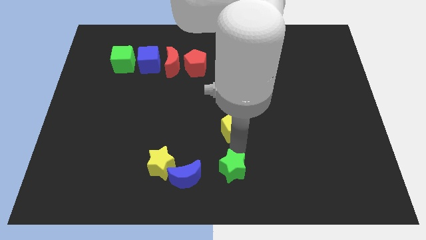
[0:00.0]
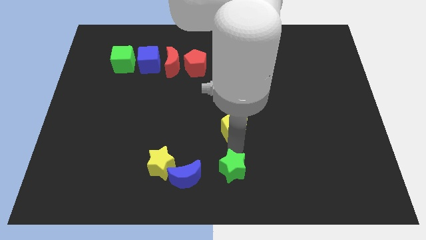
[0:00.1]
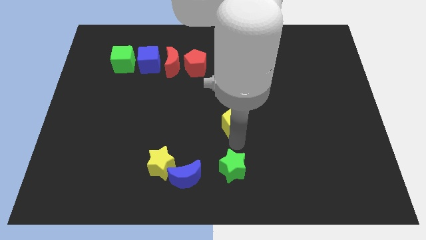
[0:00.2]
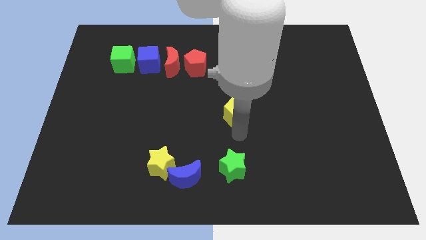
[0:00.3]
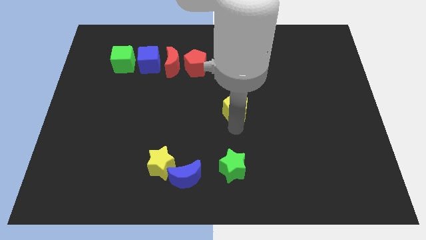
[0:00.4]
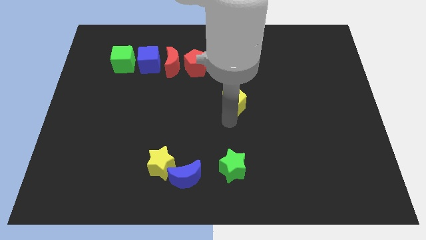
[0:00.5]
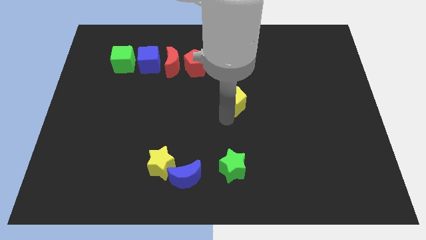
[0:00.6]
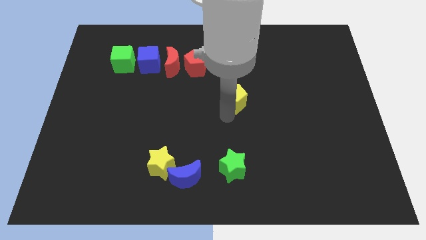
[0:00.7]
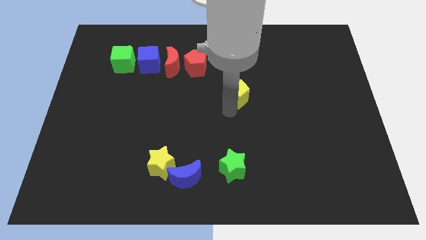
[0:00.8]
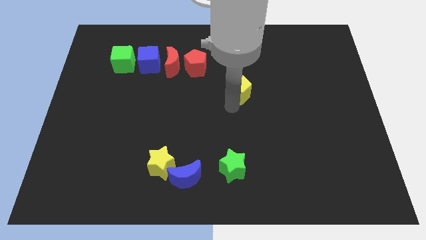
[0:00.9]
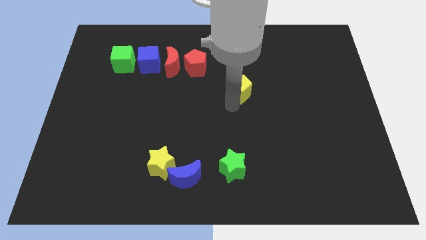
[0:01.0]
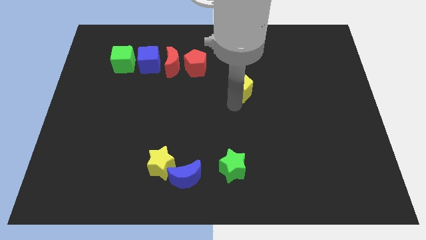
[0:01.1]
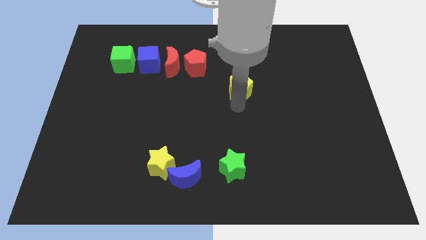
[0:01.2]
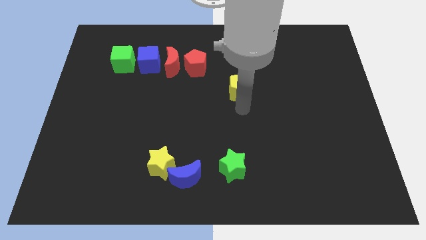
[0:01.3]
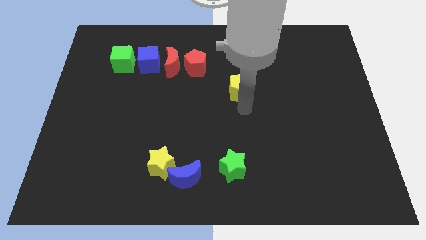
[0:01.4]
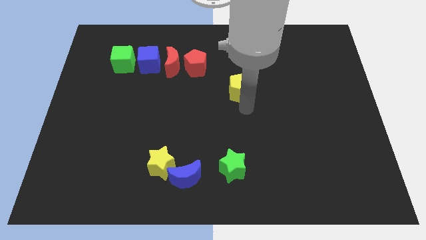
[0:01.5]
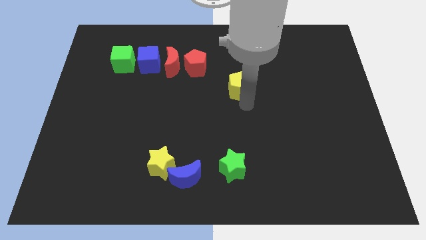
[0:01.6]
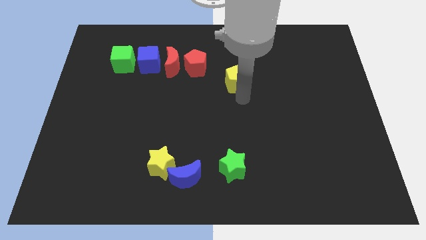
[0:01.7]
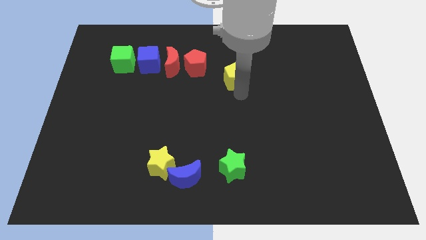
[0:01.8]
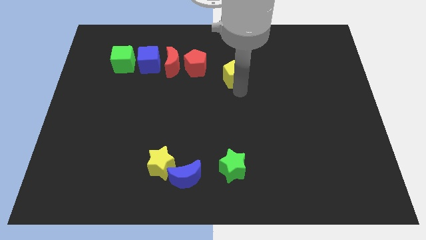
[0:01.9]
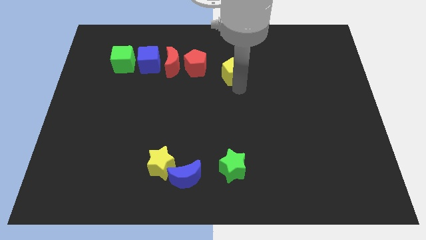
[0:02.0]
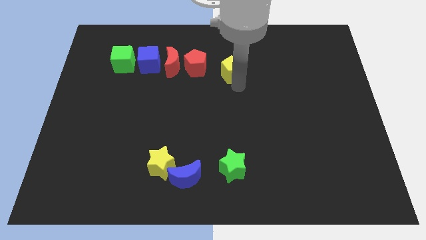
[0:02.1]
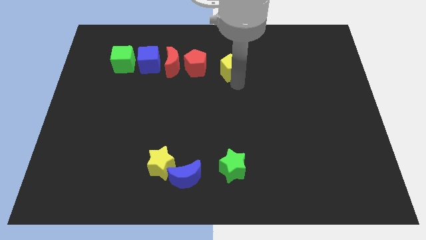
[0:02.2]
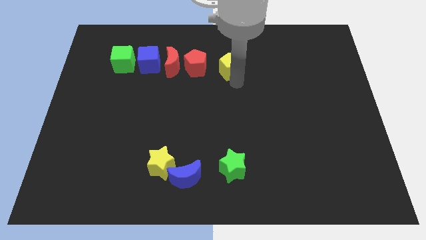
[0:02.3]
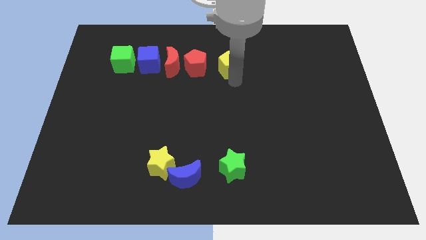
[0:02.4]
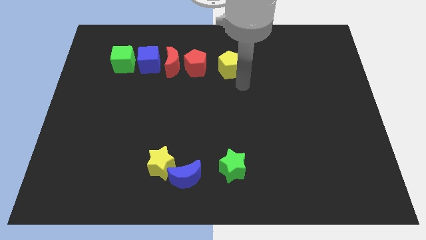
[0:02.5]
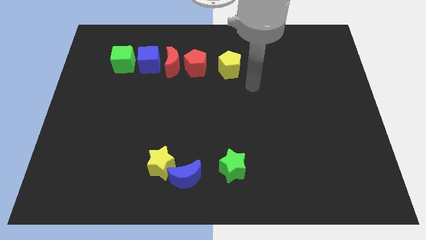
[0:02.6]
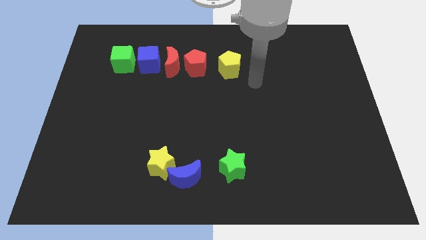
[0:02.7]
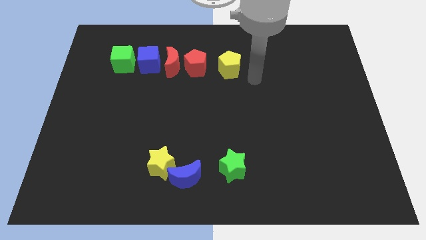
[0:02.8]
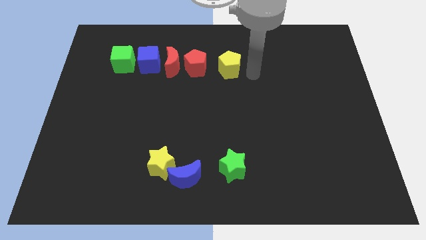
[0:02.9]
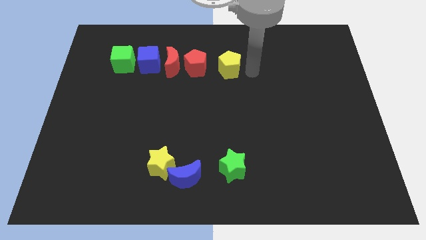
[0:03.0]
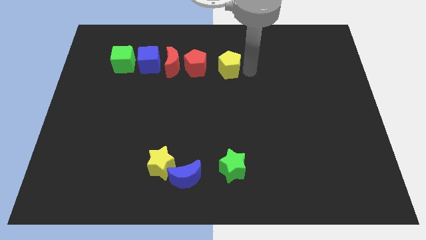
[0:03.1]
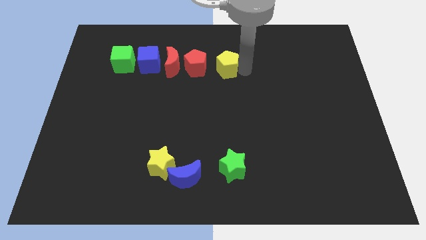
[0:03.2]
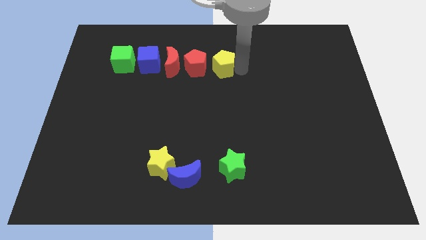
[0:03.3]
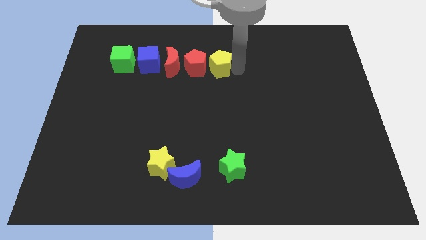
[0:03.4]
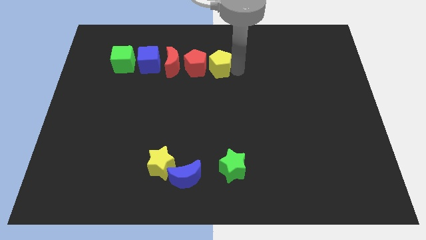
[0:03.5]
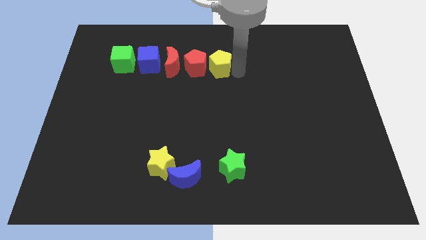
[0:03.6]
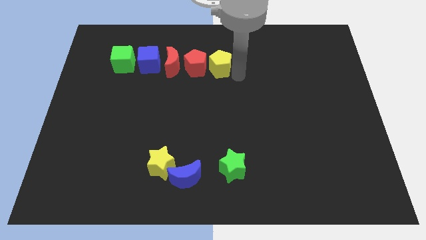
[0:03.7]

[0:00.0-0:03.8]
place yellow pentagon beside red pentagon

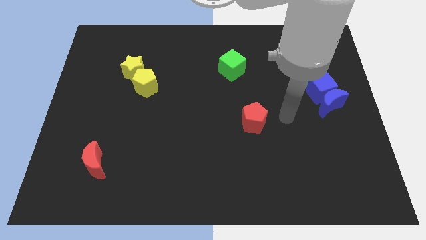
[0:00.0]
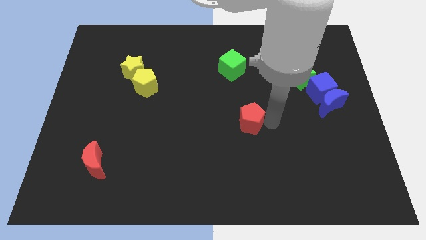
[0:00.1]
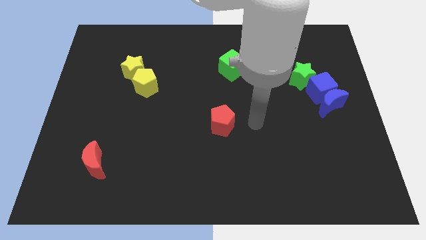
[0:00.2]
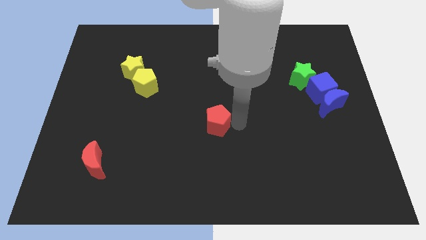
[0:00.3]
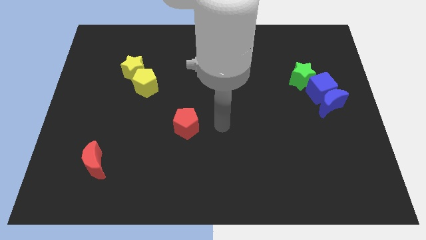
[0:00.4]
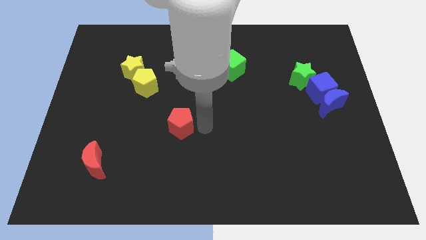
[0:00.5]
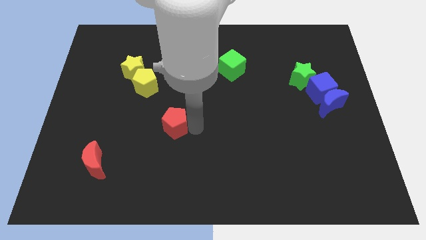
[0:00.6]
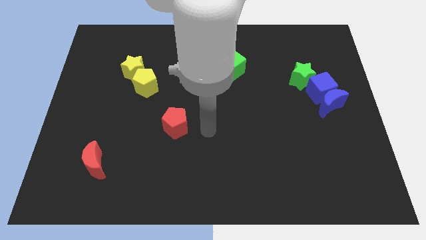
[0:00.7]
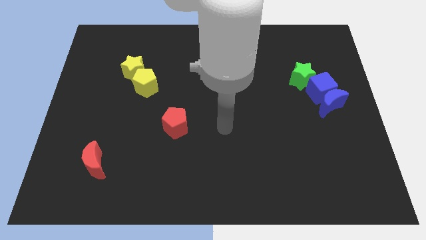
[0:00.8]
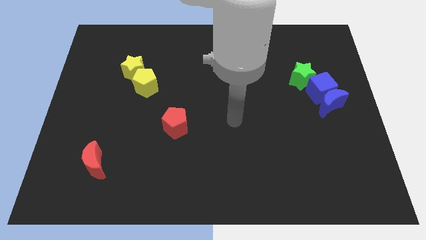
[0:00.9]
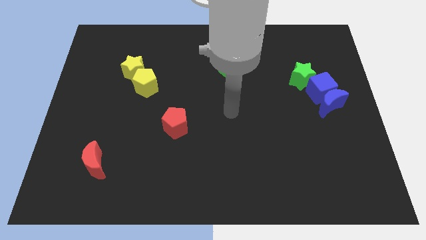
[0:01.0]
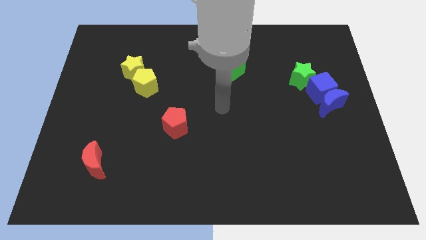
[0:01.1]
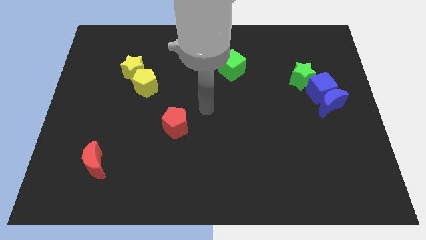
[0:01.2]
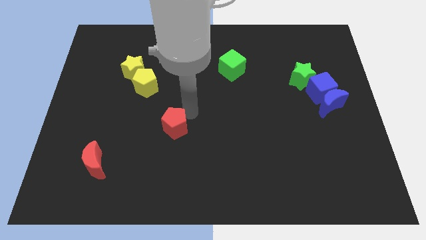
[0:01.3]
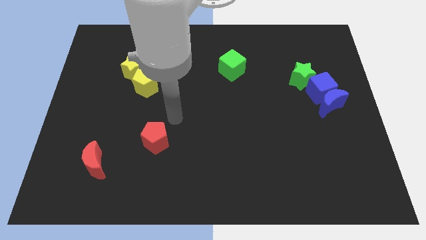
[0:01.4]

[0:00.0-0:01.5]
slide the red pentagon diagonally on the bottom right side of the yellow pentagon

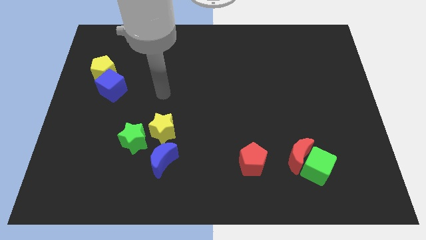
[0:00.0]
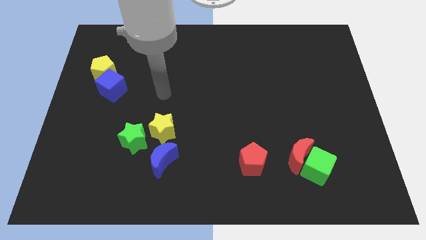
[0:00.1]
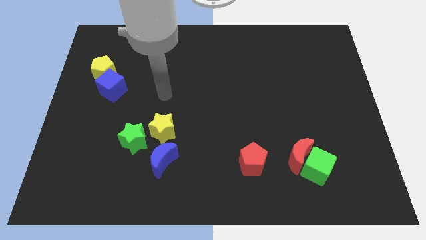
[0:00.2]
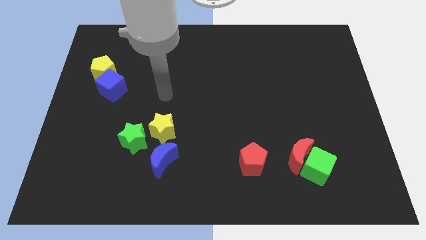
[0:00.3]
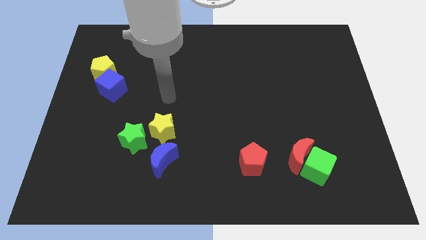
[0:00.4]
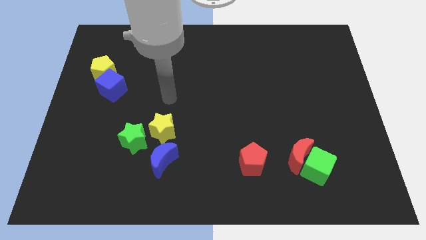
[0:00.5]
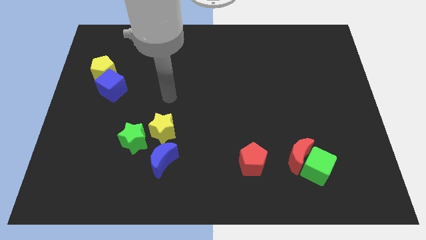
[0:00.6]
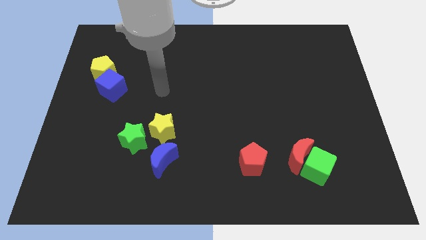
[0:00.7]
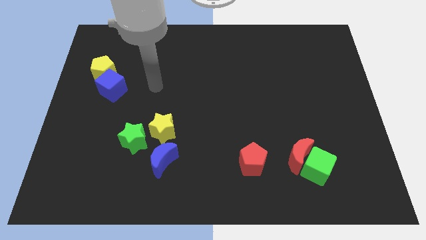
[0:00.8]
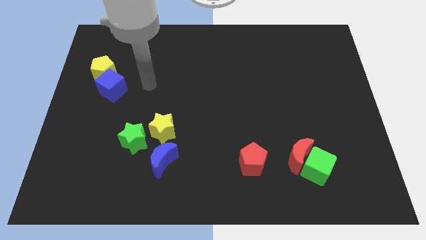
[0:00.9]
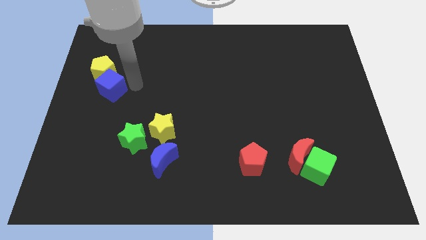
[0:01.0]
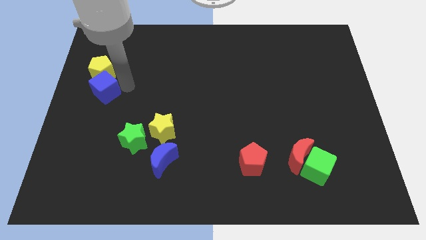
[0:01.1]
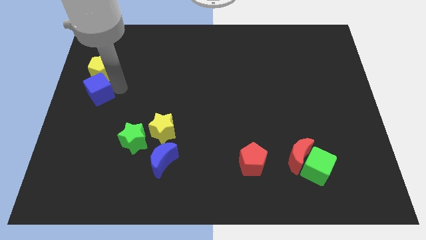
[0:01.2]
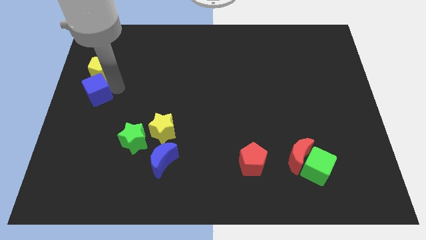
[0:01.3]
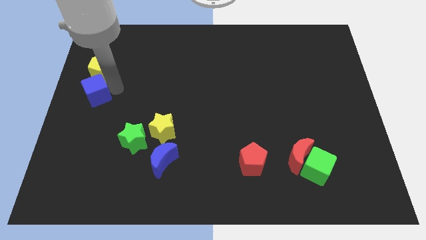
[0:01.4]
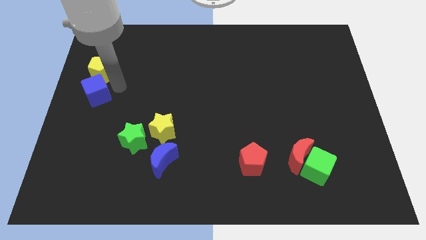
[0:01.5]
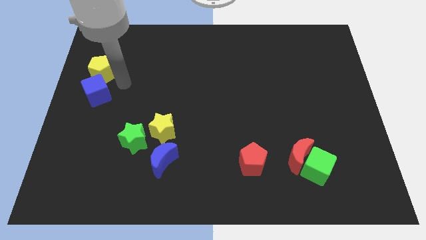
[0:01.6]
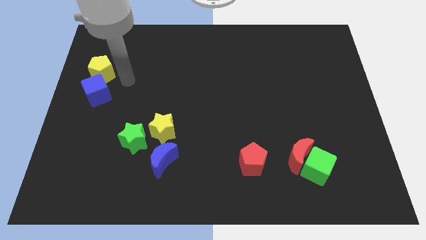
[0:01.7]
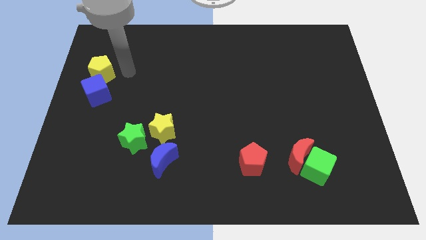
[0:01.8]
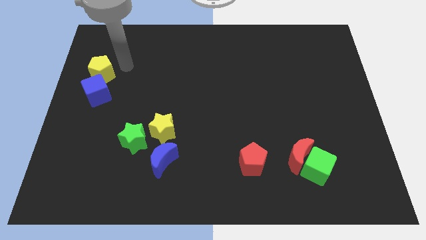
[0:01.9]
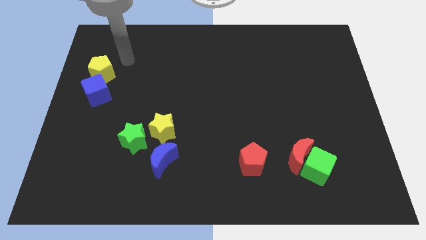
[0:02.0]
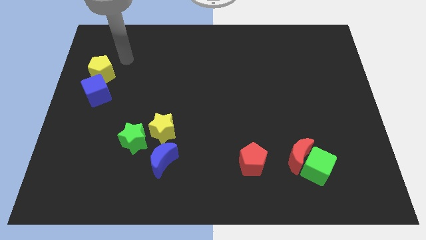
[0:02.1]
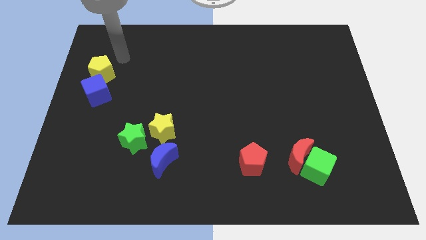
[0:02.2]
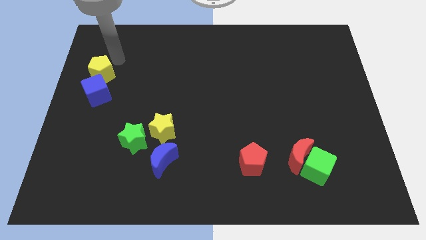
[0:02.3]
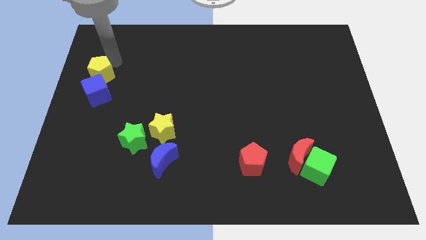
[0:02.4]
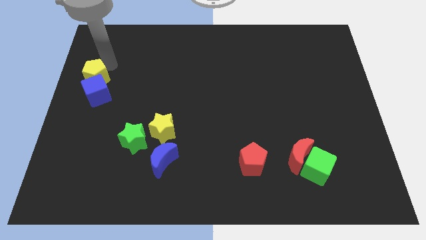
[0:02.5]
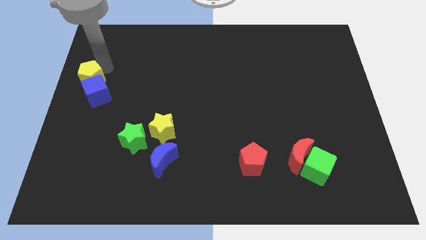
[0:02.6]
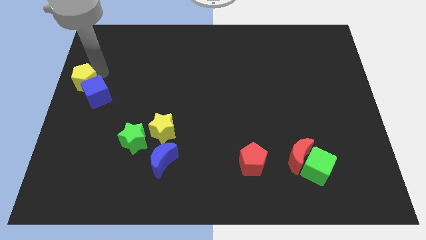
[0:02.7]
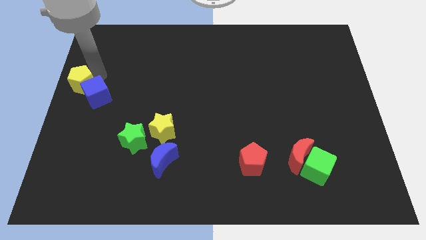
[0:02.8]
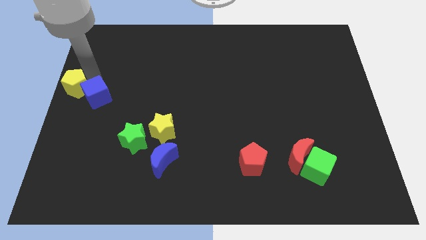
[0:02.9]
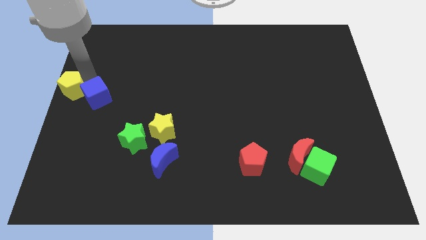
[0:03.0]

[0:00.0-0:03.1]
push the blue cube and yellow pentagon slightly to left

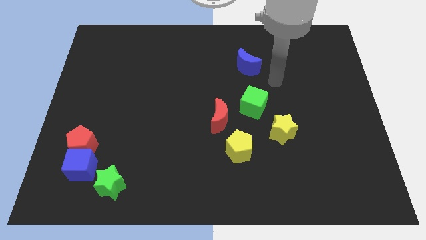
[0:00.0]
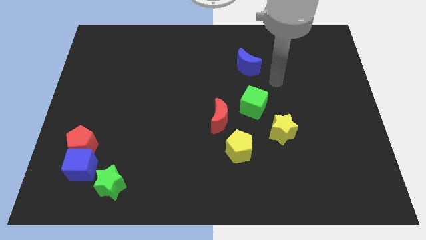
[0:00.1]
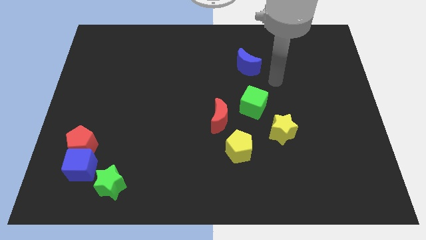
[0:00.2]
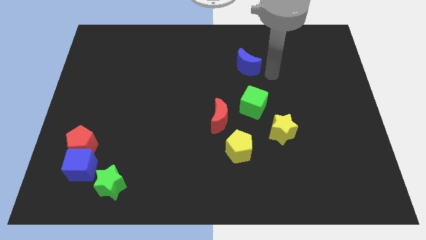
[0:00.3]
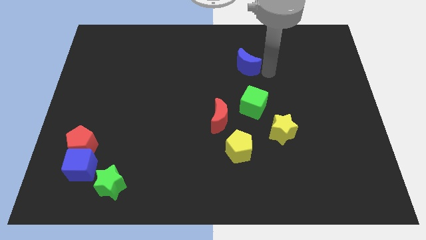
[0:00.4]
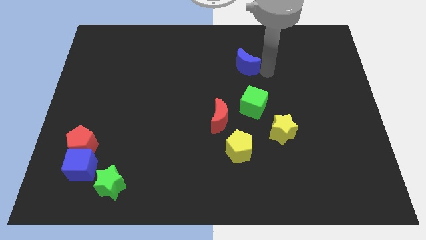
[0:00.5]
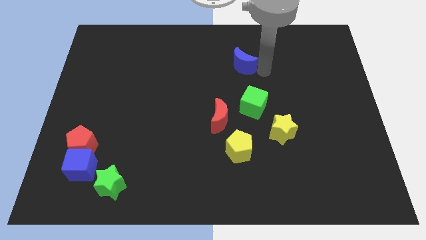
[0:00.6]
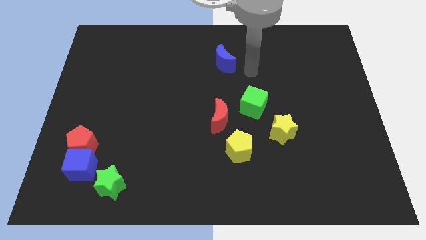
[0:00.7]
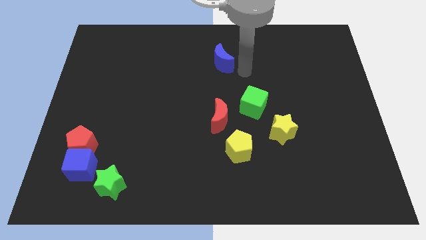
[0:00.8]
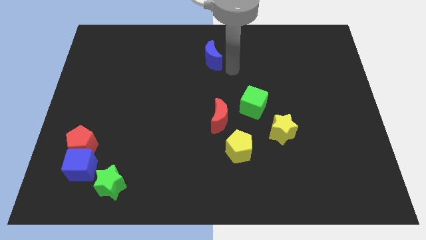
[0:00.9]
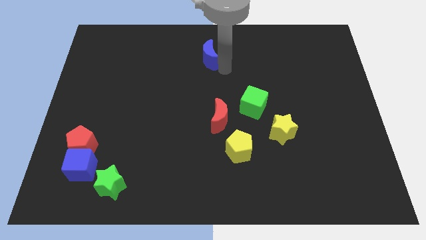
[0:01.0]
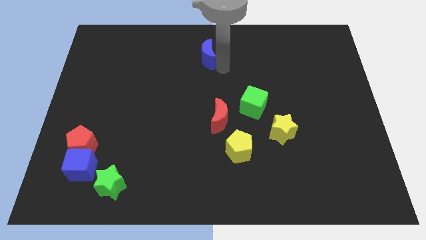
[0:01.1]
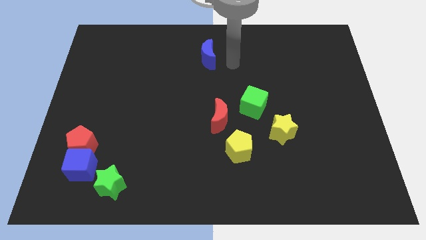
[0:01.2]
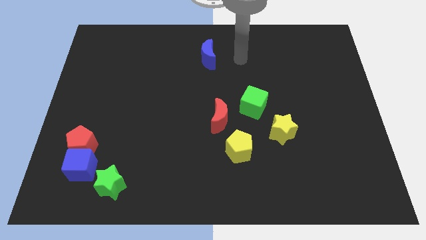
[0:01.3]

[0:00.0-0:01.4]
push the blue crescent to the top center of the board
